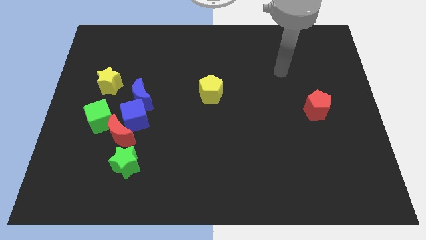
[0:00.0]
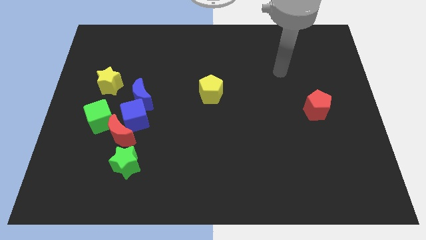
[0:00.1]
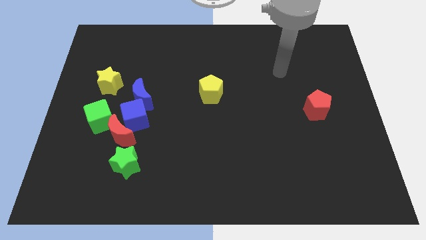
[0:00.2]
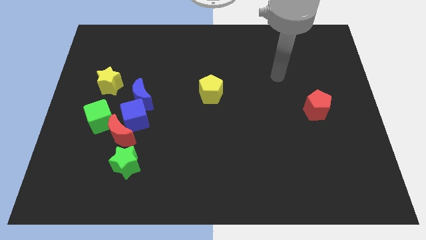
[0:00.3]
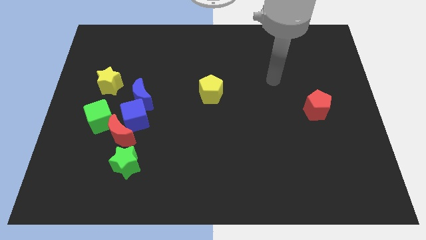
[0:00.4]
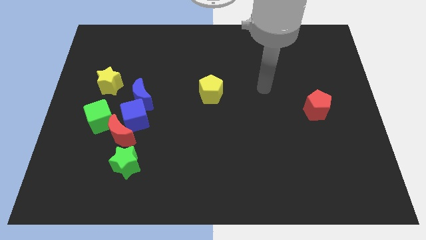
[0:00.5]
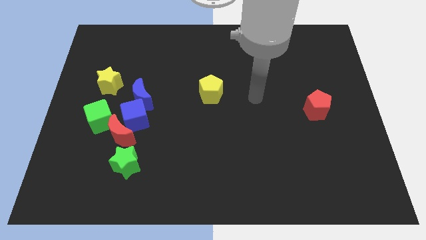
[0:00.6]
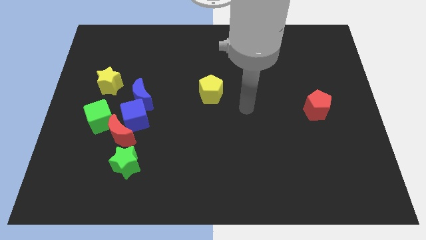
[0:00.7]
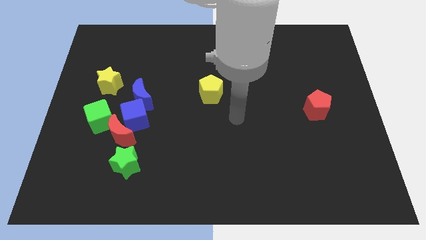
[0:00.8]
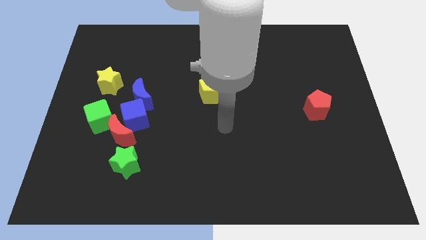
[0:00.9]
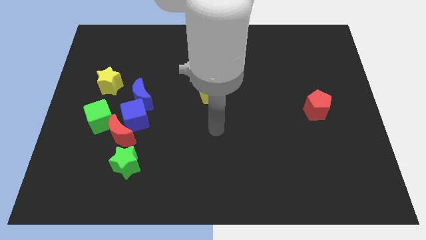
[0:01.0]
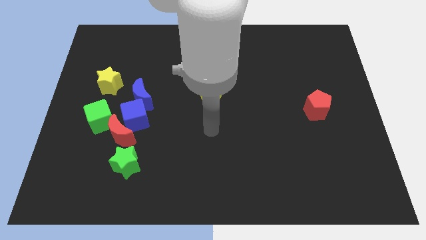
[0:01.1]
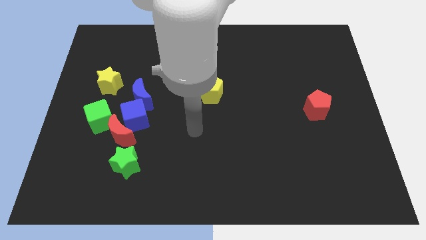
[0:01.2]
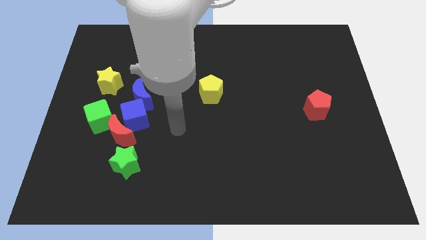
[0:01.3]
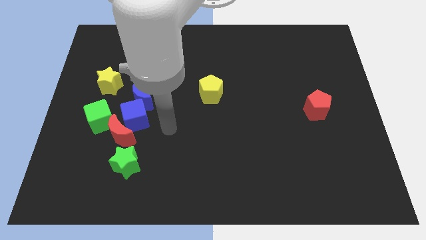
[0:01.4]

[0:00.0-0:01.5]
move your arm towards the blue cube

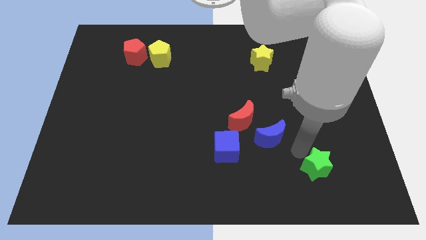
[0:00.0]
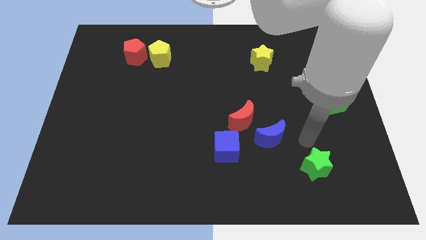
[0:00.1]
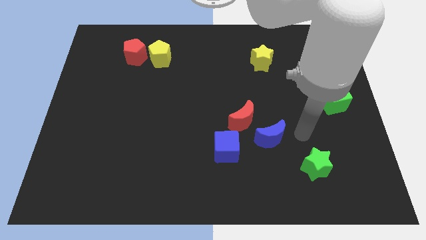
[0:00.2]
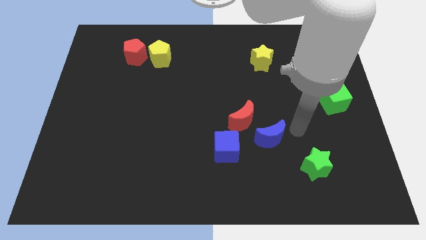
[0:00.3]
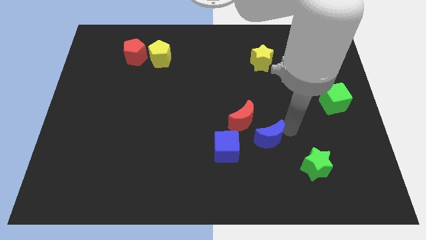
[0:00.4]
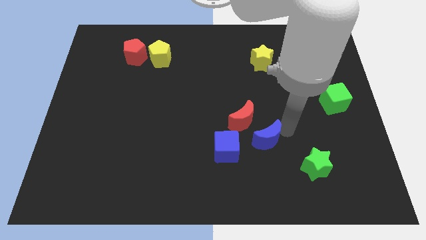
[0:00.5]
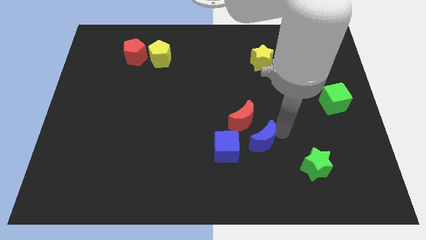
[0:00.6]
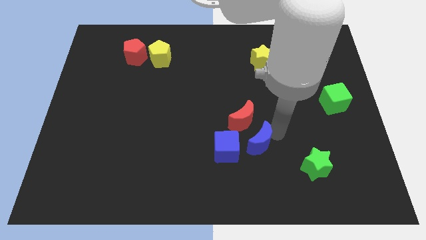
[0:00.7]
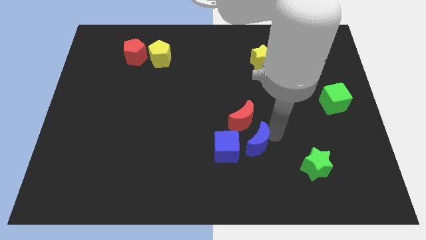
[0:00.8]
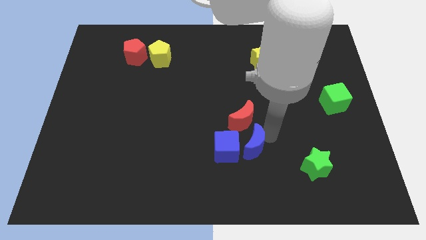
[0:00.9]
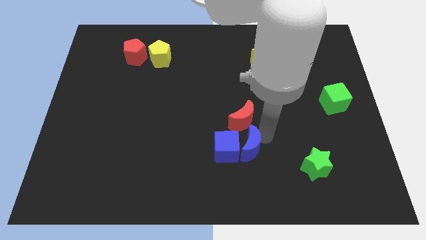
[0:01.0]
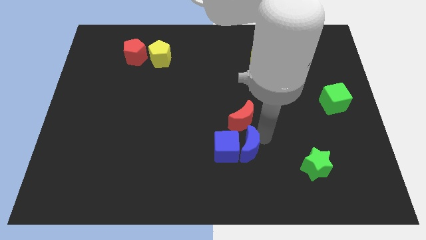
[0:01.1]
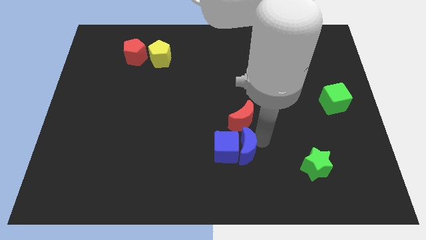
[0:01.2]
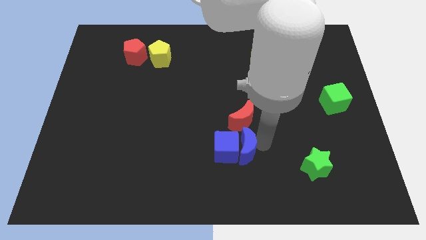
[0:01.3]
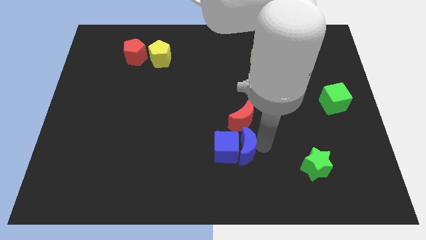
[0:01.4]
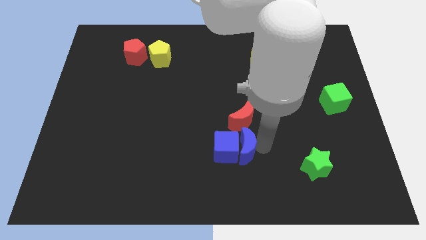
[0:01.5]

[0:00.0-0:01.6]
slide the blue blocks below the red moon

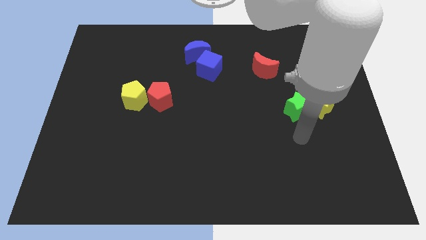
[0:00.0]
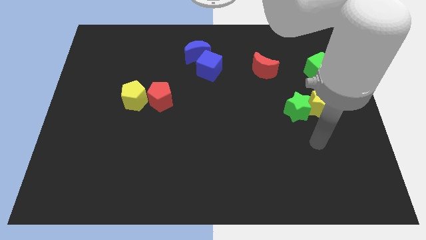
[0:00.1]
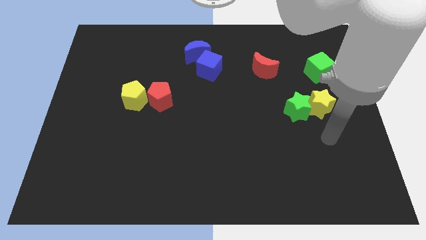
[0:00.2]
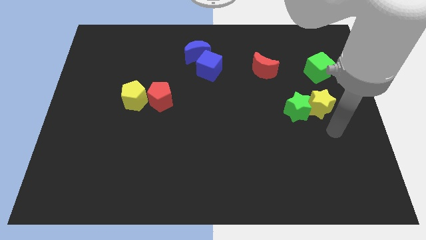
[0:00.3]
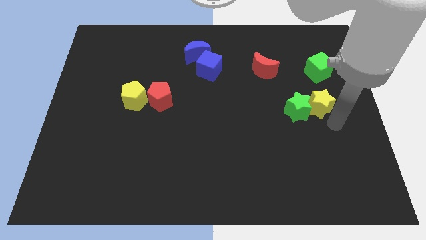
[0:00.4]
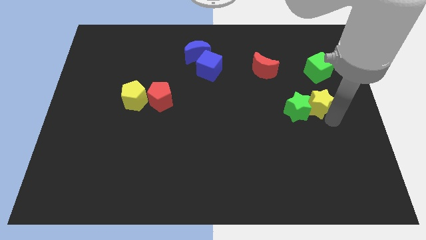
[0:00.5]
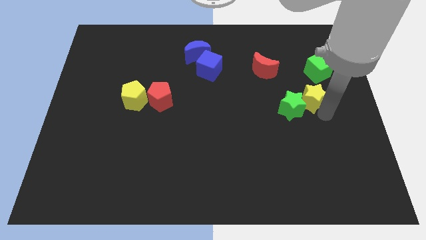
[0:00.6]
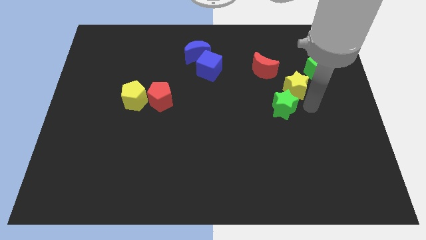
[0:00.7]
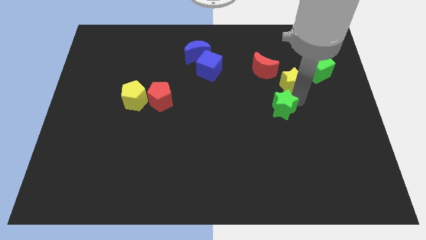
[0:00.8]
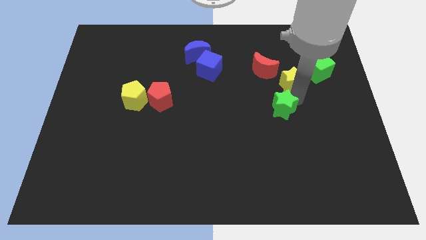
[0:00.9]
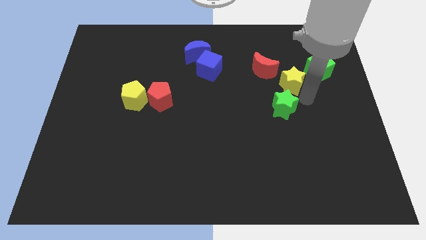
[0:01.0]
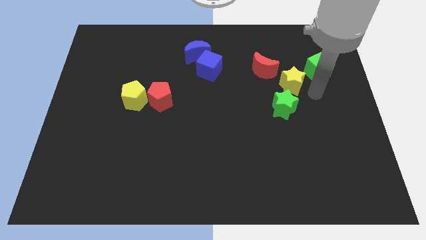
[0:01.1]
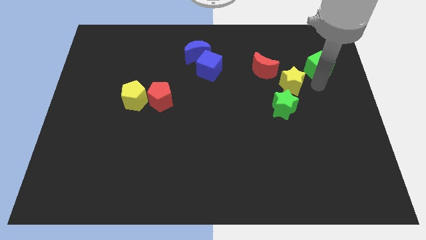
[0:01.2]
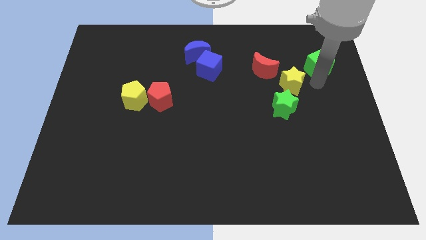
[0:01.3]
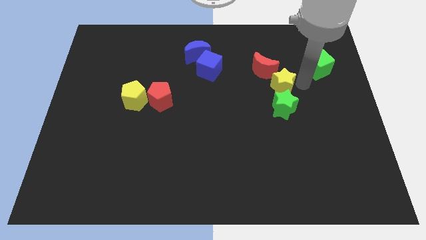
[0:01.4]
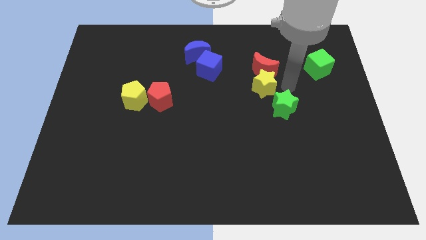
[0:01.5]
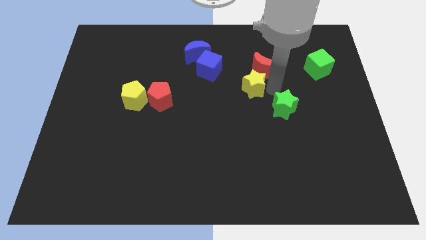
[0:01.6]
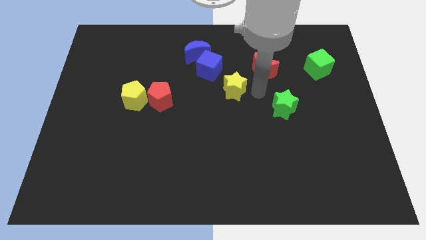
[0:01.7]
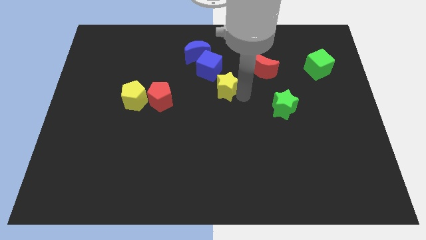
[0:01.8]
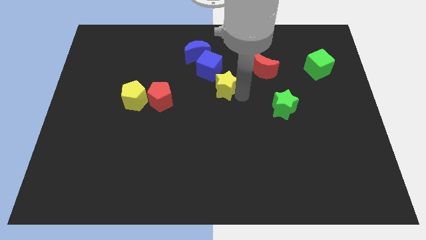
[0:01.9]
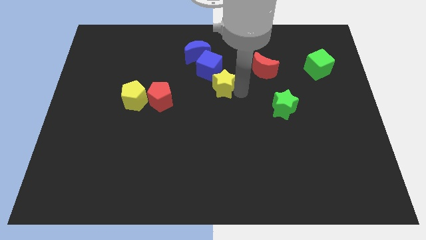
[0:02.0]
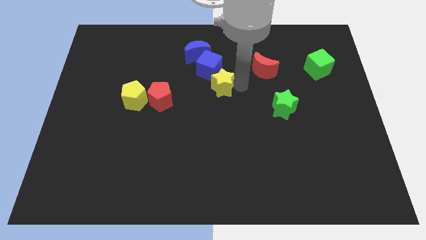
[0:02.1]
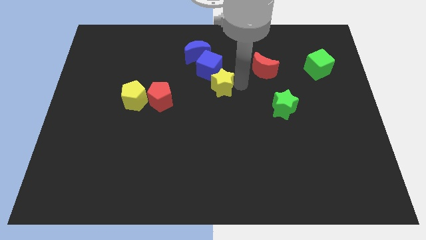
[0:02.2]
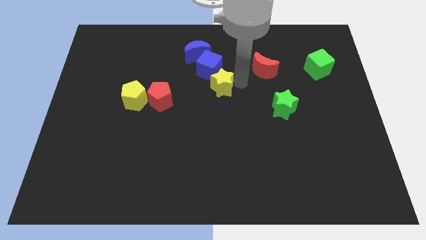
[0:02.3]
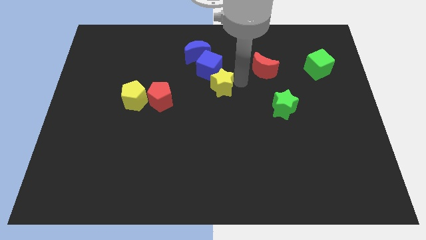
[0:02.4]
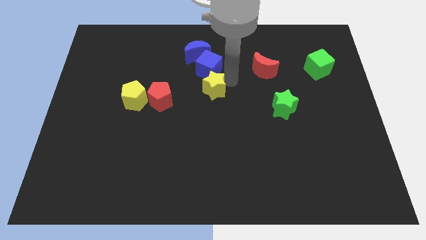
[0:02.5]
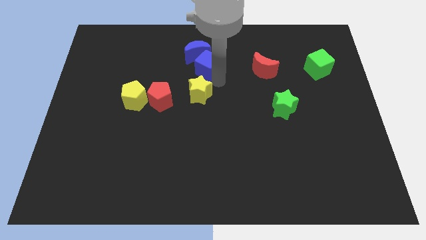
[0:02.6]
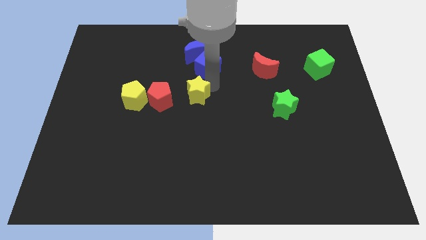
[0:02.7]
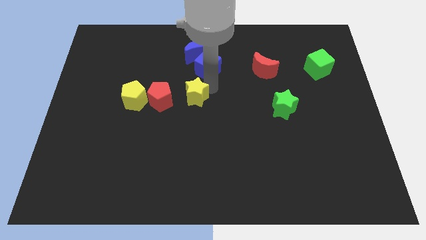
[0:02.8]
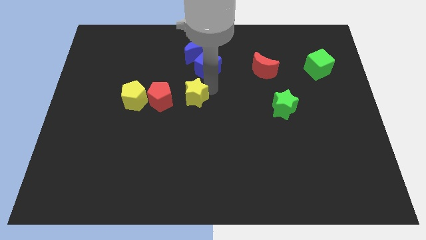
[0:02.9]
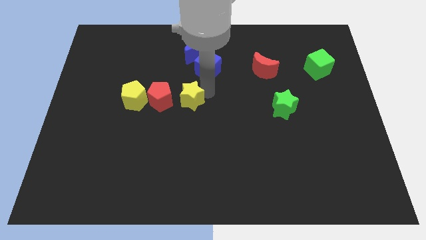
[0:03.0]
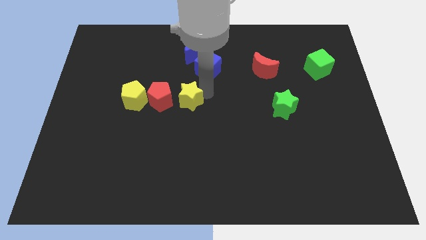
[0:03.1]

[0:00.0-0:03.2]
separate the yellow star from the green star

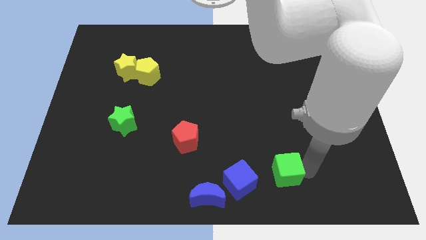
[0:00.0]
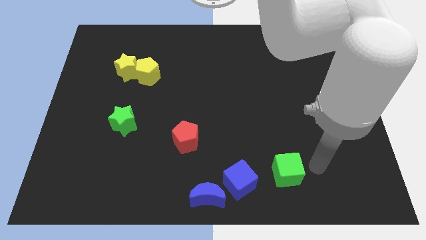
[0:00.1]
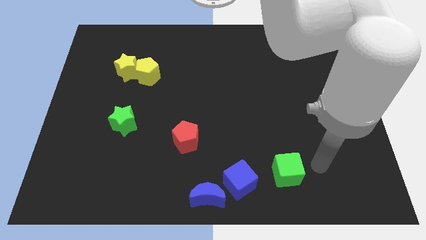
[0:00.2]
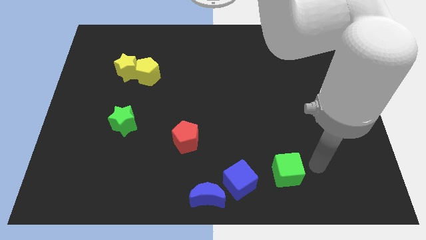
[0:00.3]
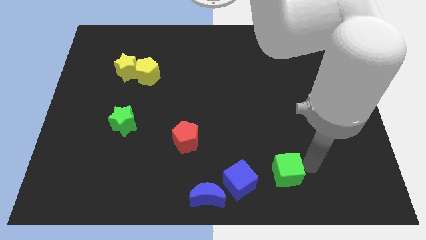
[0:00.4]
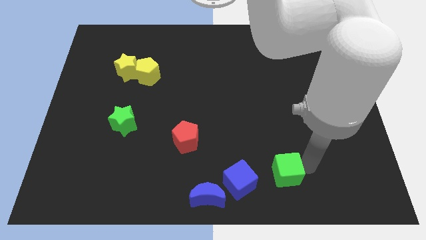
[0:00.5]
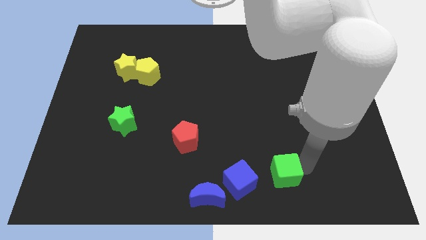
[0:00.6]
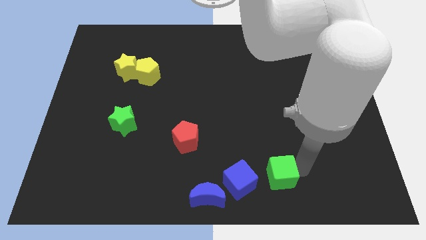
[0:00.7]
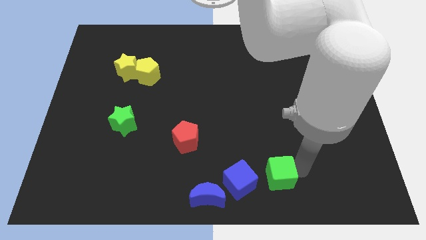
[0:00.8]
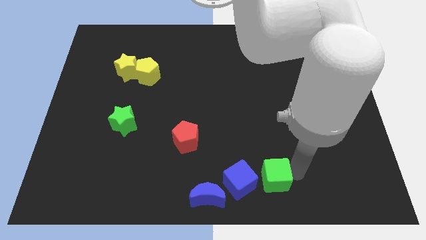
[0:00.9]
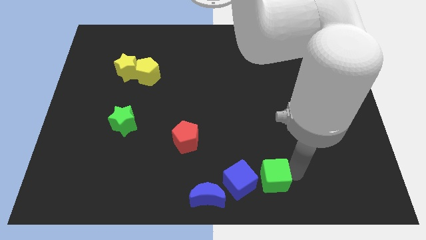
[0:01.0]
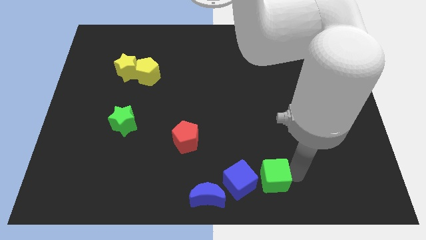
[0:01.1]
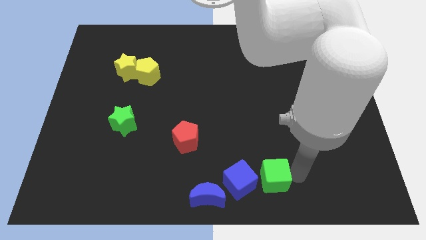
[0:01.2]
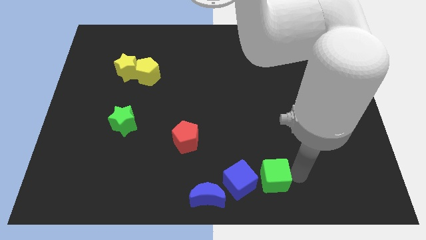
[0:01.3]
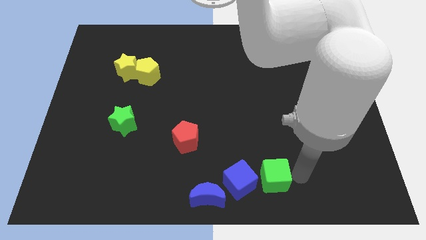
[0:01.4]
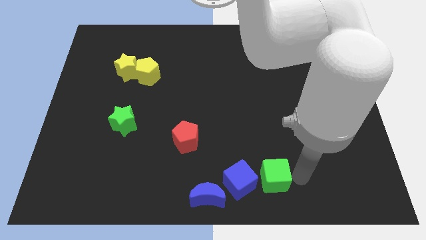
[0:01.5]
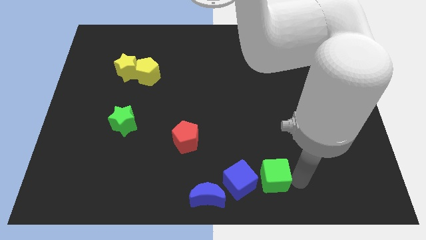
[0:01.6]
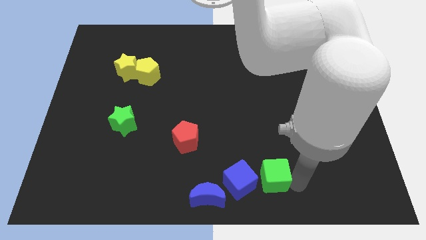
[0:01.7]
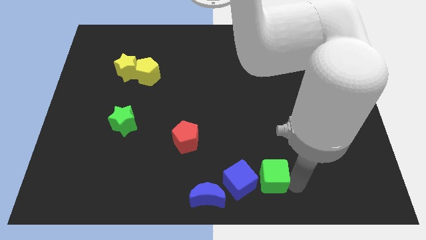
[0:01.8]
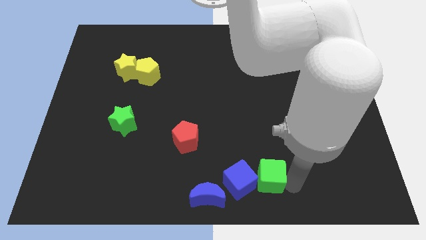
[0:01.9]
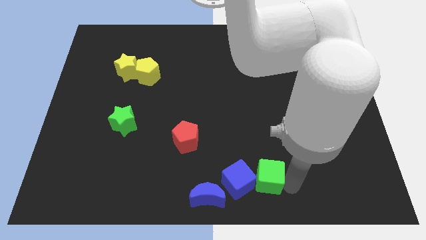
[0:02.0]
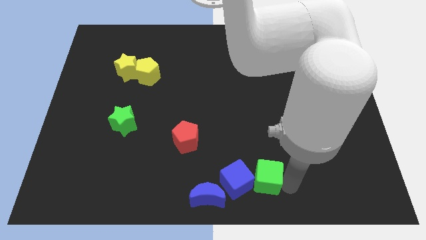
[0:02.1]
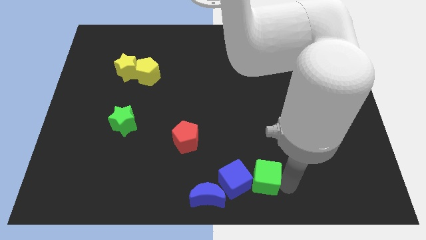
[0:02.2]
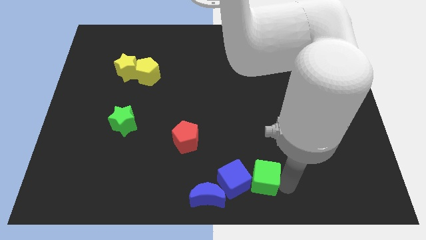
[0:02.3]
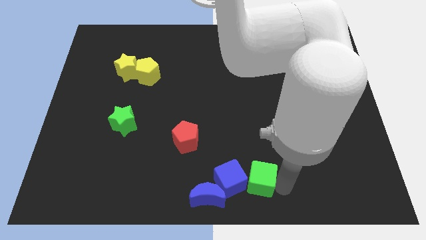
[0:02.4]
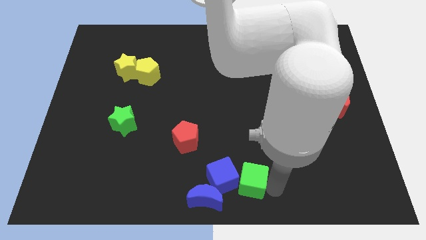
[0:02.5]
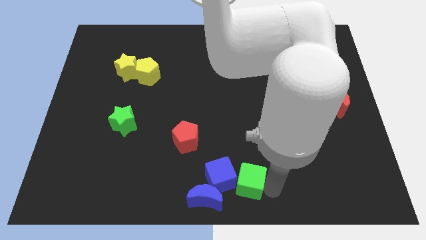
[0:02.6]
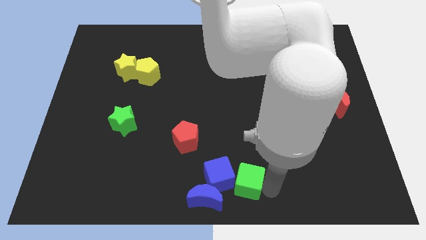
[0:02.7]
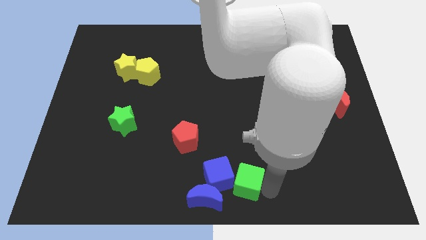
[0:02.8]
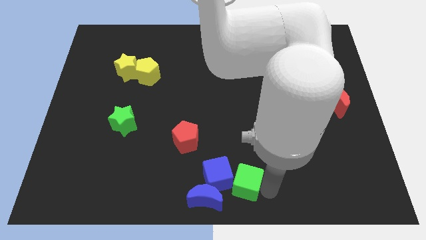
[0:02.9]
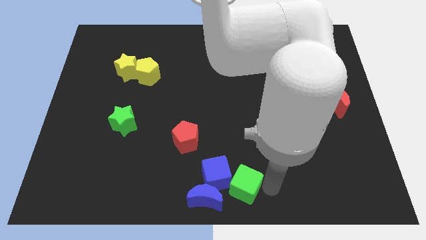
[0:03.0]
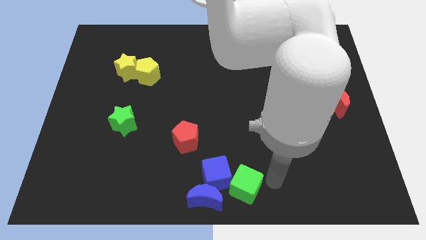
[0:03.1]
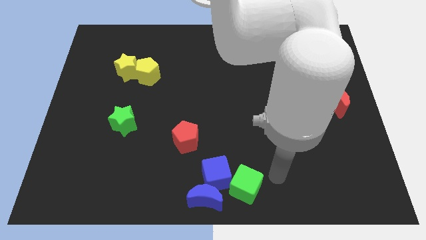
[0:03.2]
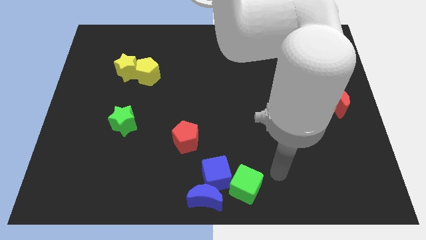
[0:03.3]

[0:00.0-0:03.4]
move the green cube into the blue cube
